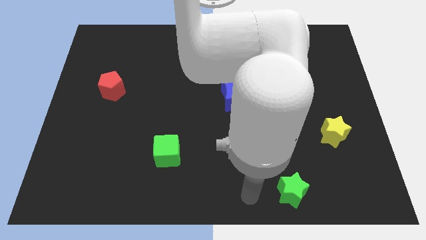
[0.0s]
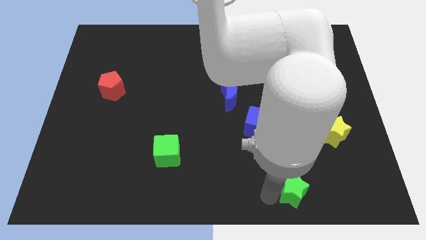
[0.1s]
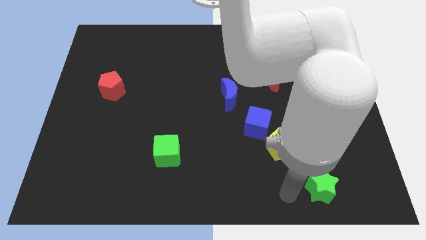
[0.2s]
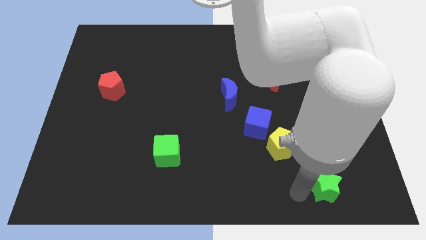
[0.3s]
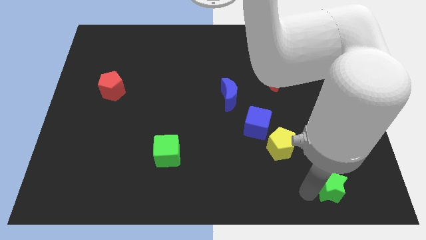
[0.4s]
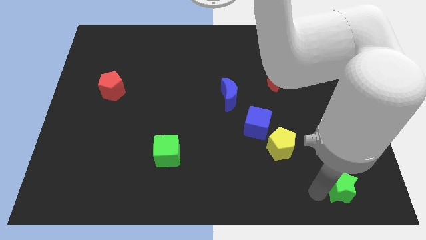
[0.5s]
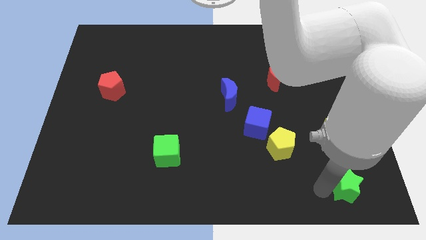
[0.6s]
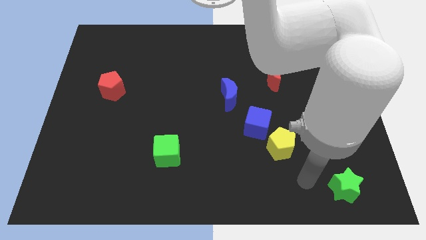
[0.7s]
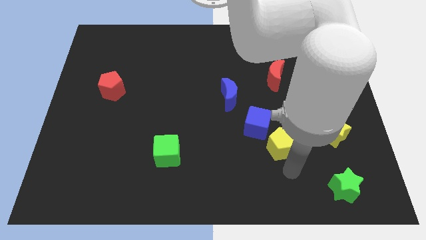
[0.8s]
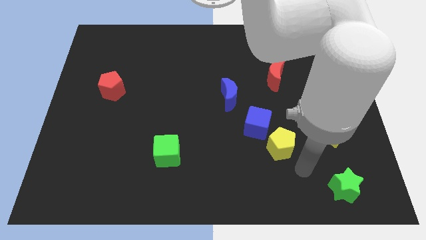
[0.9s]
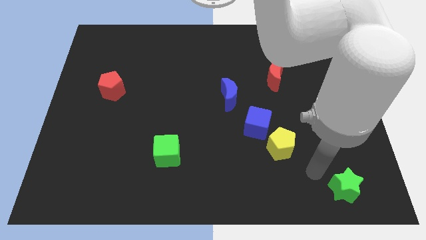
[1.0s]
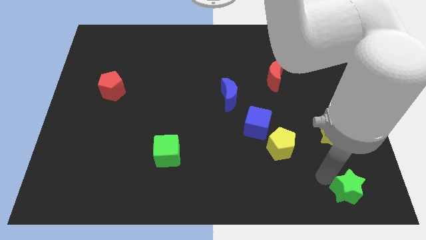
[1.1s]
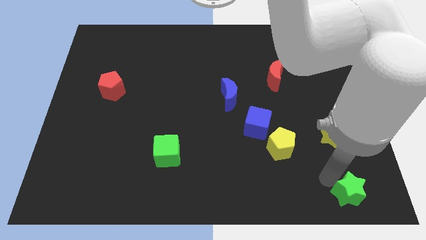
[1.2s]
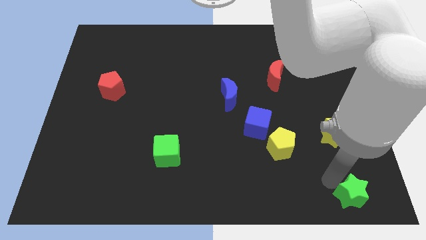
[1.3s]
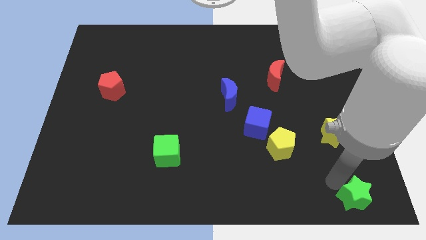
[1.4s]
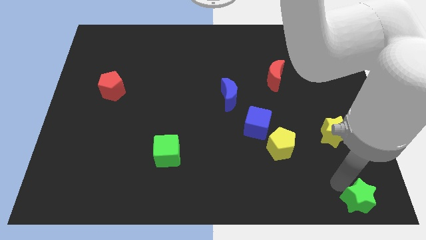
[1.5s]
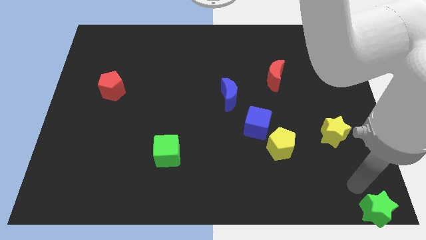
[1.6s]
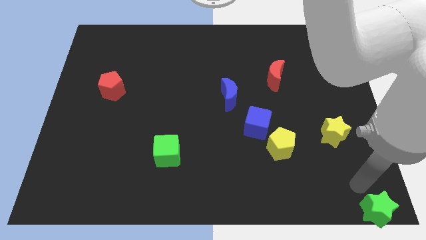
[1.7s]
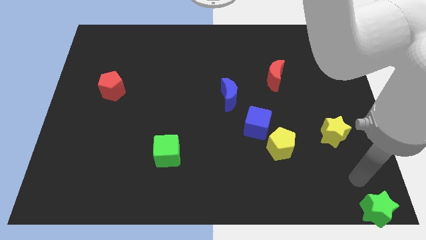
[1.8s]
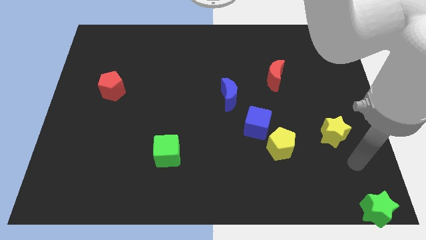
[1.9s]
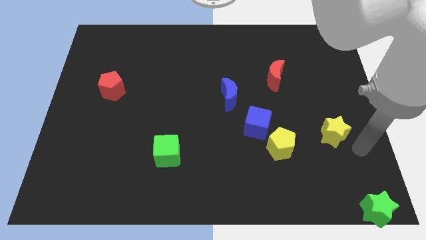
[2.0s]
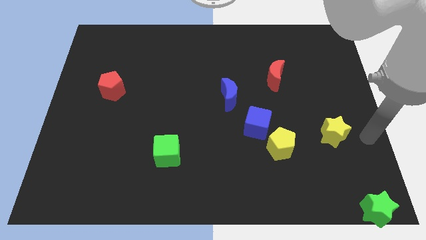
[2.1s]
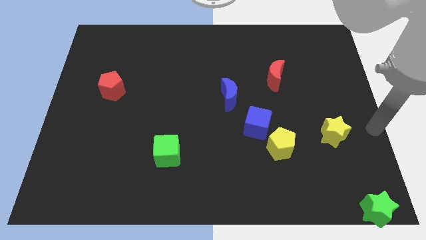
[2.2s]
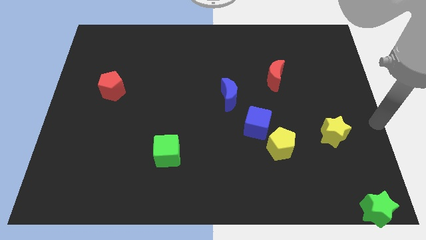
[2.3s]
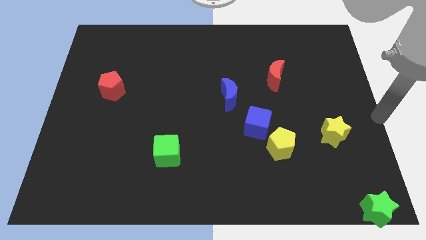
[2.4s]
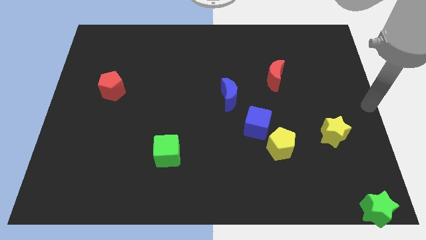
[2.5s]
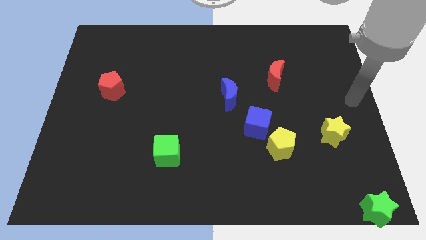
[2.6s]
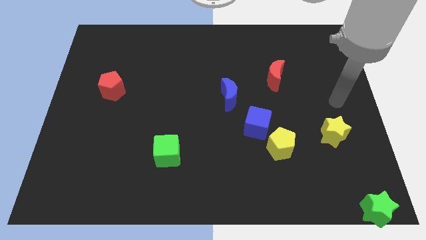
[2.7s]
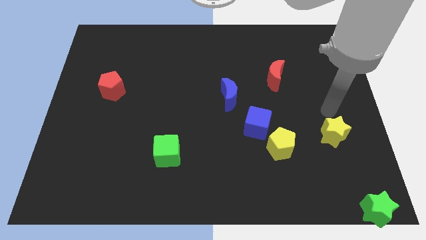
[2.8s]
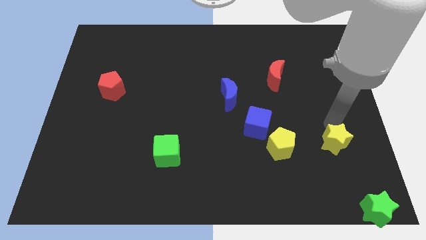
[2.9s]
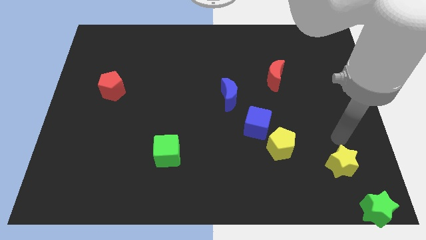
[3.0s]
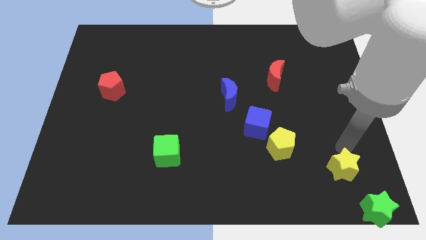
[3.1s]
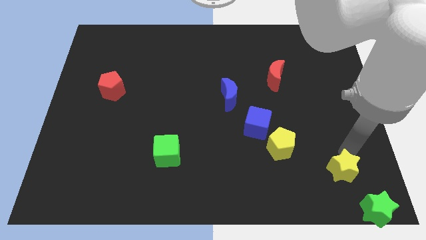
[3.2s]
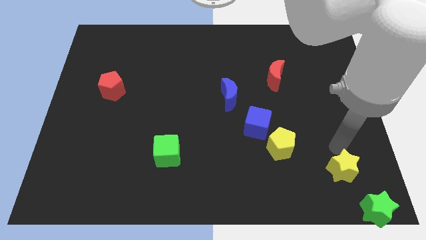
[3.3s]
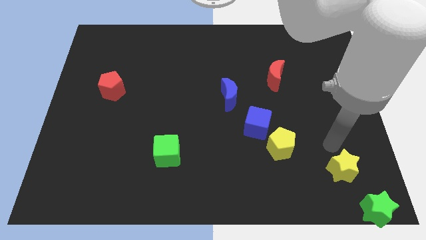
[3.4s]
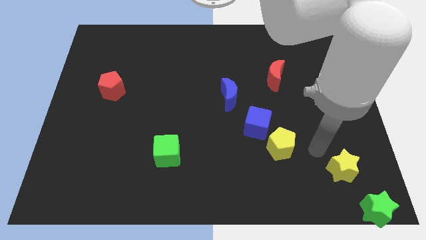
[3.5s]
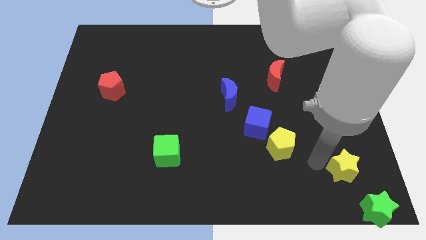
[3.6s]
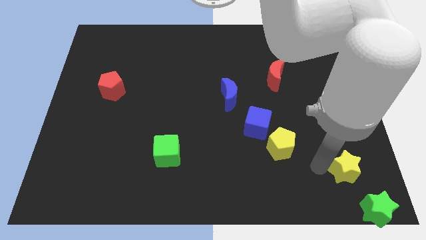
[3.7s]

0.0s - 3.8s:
move the yellow near to the green star

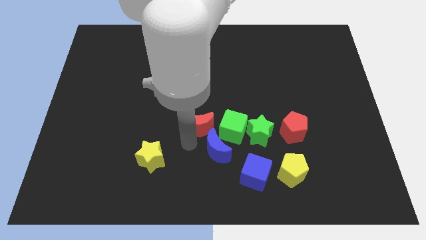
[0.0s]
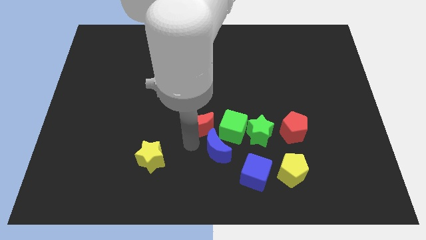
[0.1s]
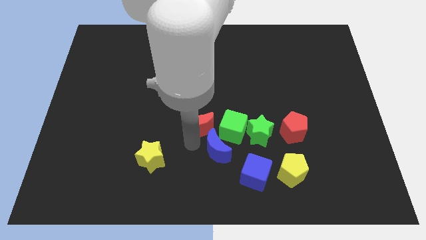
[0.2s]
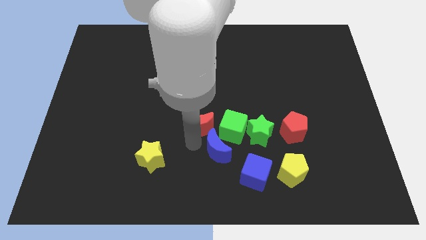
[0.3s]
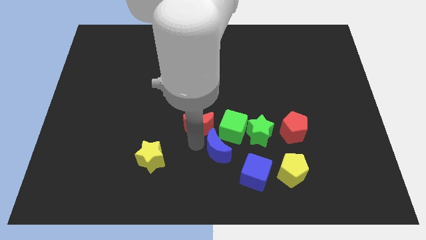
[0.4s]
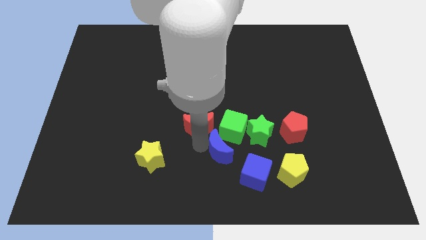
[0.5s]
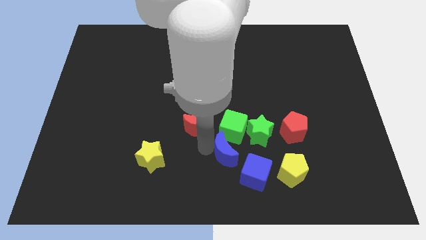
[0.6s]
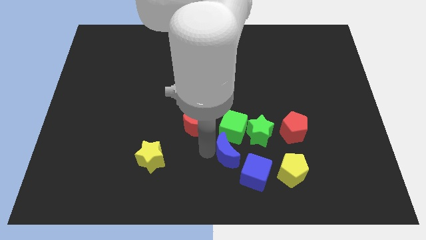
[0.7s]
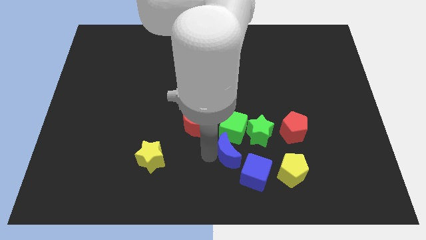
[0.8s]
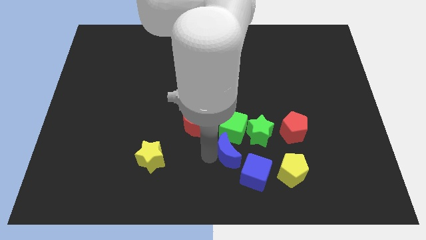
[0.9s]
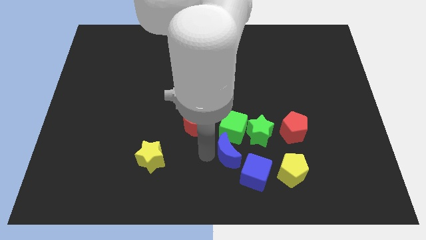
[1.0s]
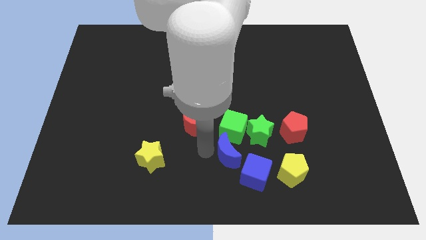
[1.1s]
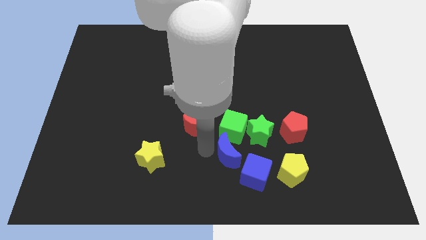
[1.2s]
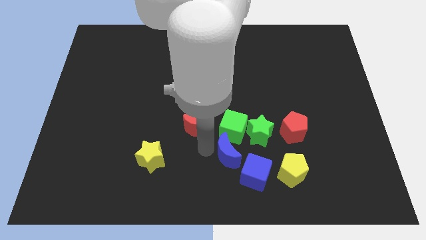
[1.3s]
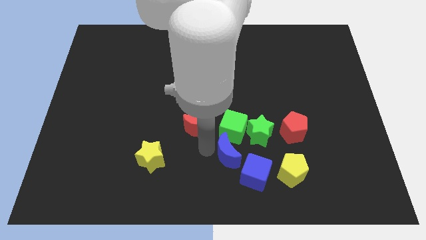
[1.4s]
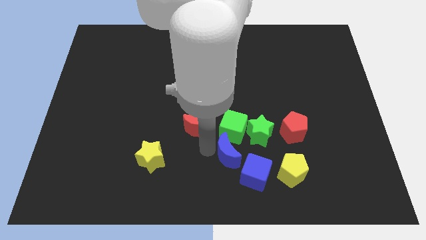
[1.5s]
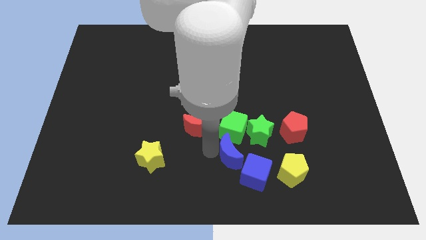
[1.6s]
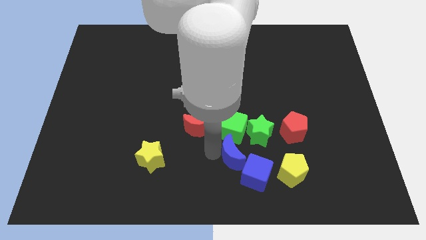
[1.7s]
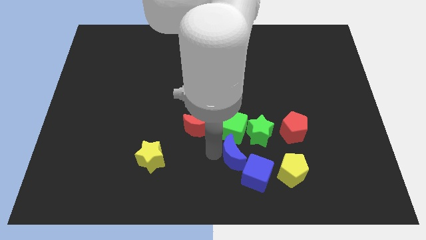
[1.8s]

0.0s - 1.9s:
move the blue crescent into blue cube

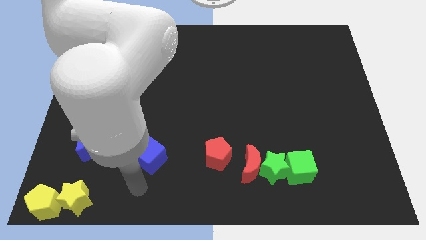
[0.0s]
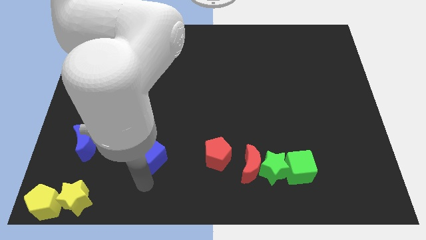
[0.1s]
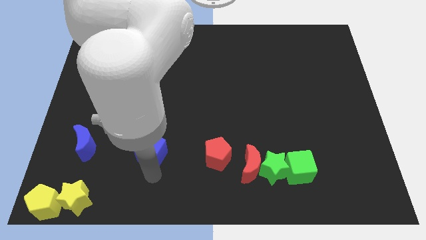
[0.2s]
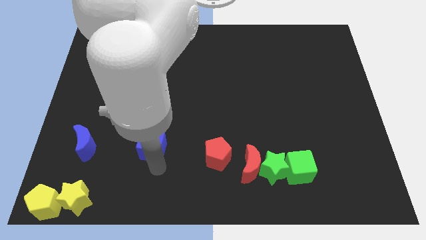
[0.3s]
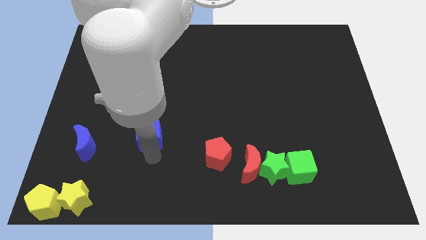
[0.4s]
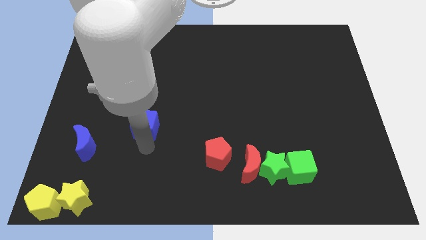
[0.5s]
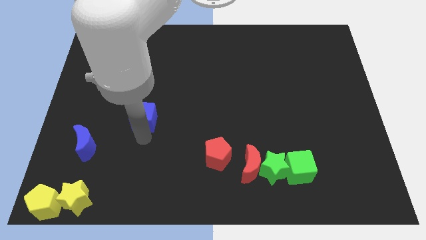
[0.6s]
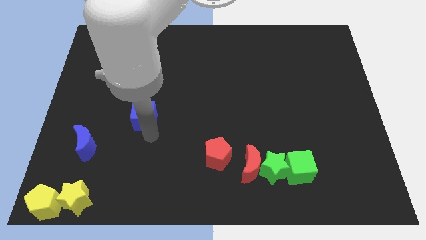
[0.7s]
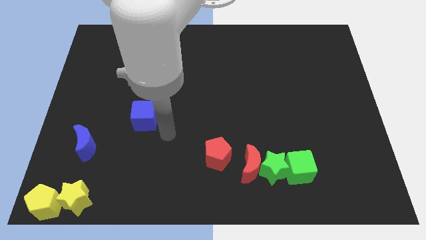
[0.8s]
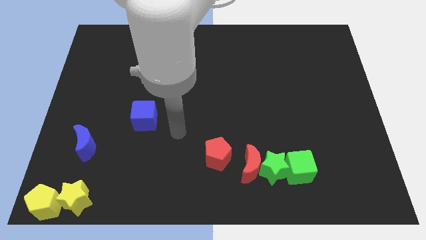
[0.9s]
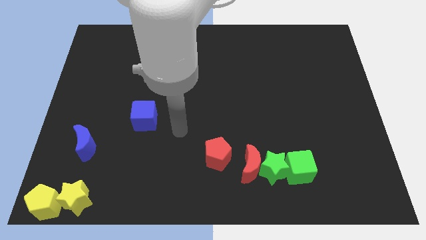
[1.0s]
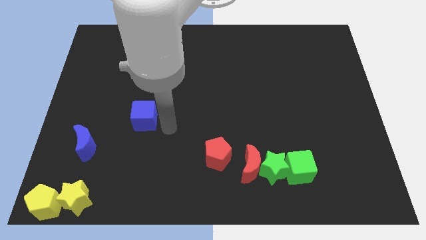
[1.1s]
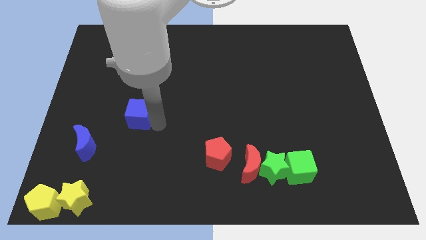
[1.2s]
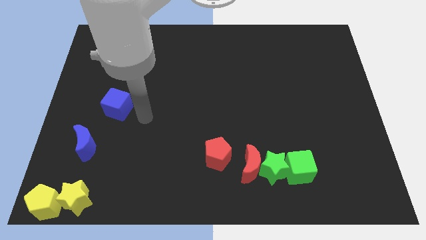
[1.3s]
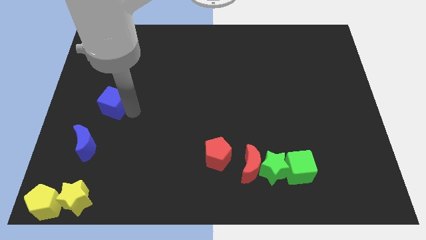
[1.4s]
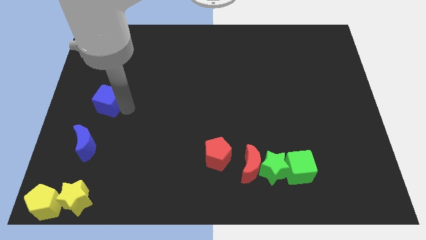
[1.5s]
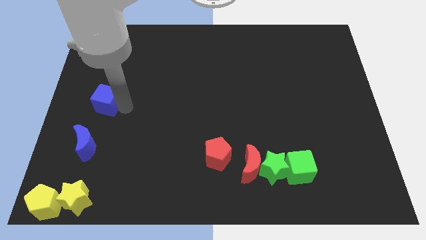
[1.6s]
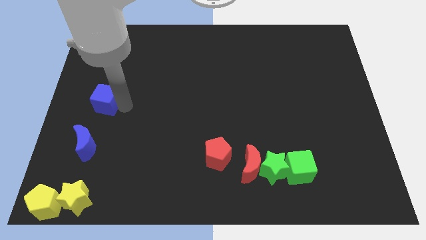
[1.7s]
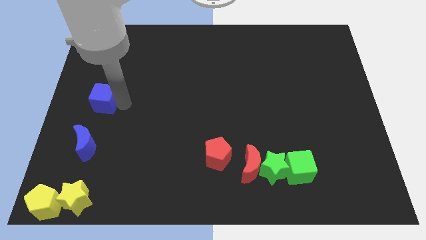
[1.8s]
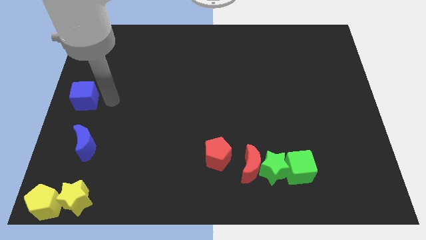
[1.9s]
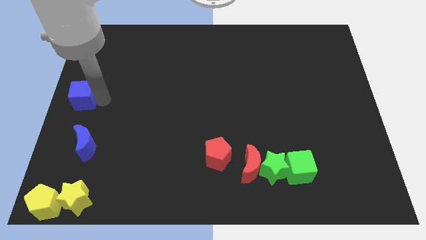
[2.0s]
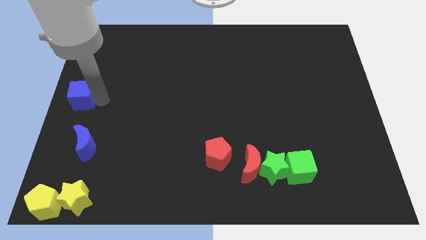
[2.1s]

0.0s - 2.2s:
move the blue cube to the center left

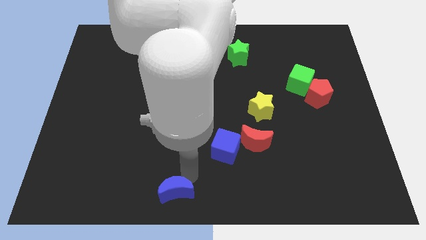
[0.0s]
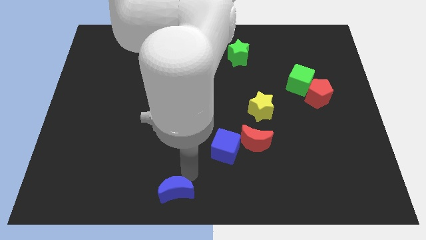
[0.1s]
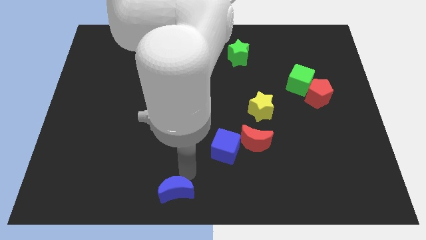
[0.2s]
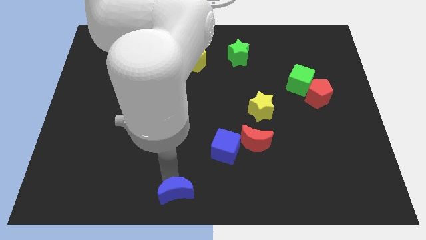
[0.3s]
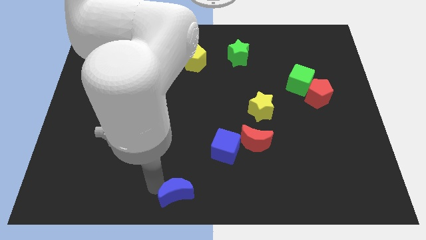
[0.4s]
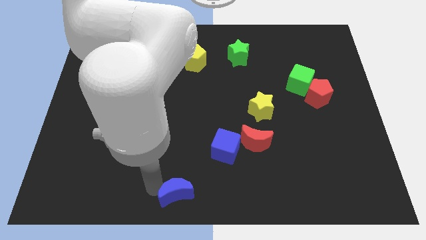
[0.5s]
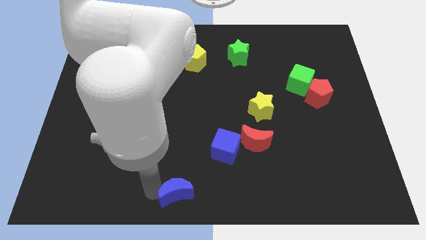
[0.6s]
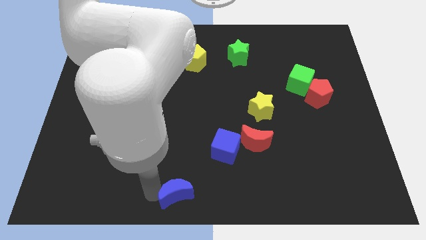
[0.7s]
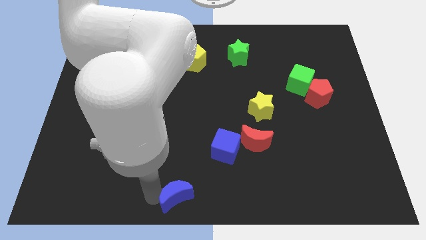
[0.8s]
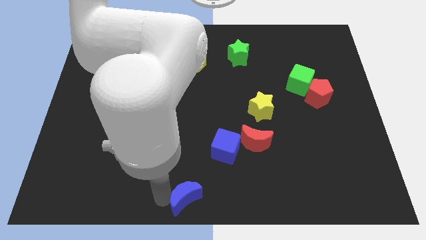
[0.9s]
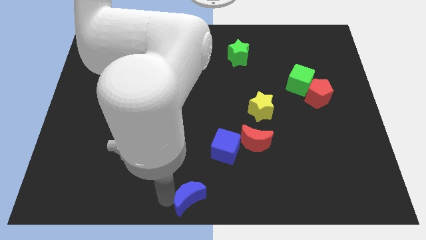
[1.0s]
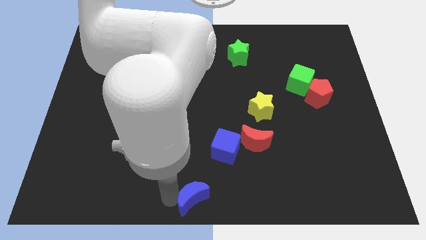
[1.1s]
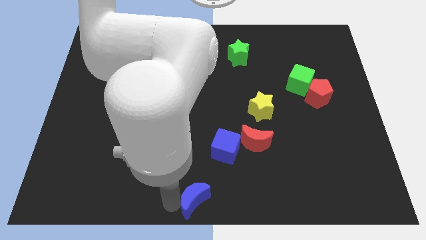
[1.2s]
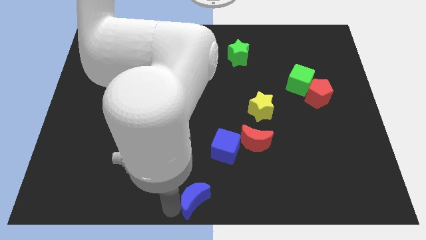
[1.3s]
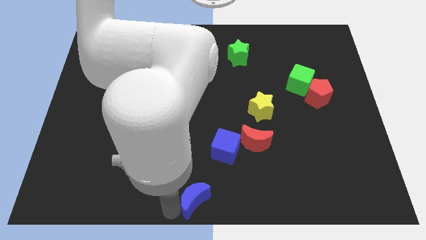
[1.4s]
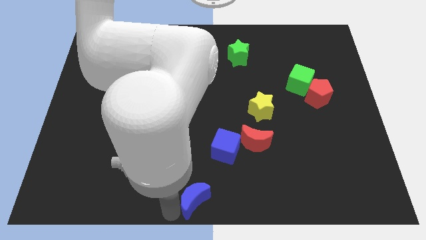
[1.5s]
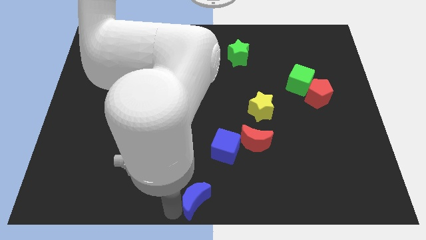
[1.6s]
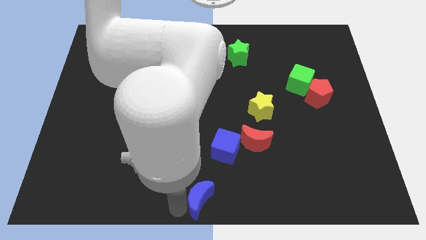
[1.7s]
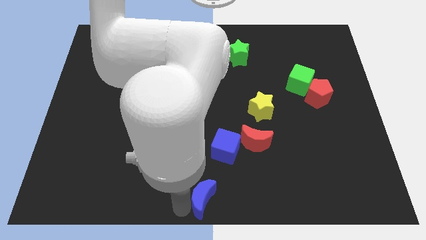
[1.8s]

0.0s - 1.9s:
place the blue moon at the bottom center
